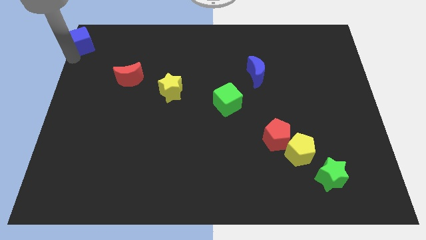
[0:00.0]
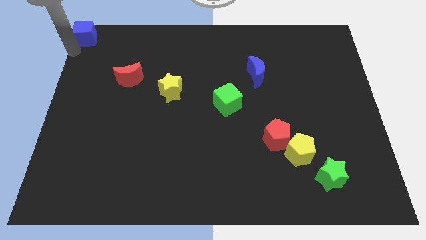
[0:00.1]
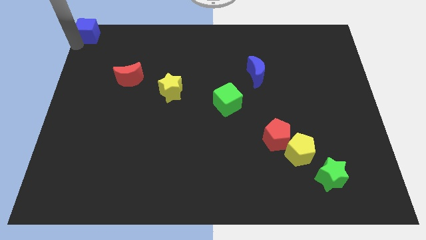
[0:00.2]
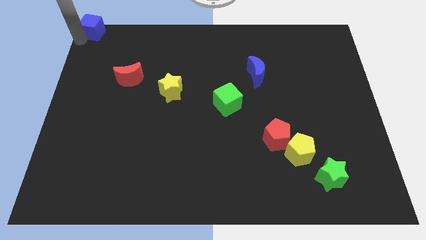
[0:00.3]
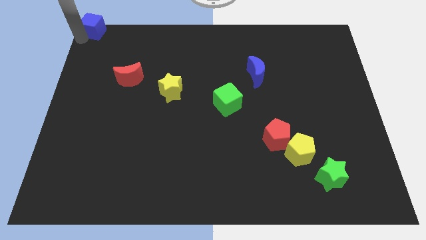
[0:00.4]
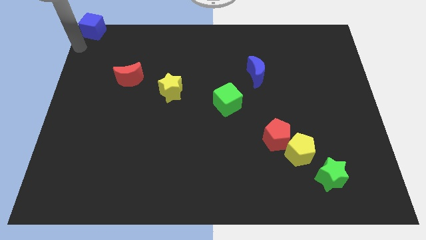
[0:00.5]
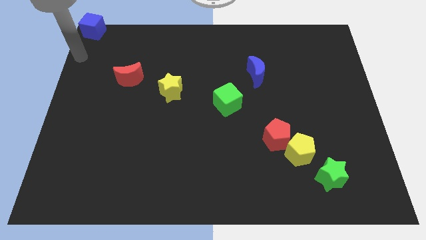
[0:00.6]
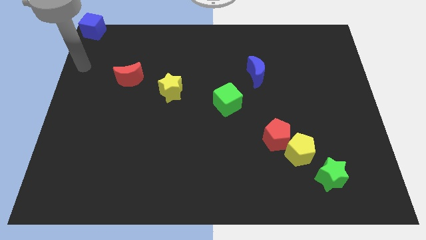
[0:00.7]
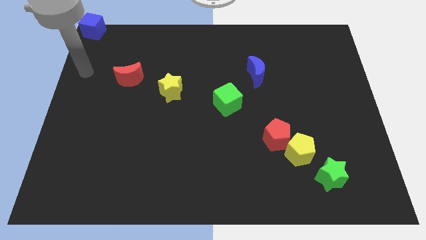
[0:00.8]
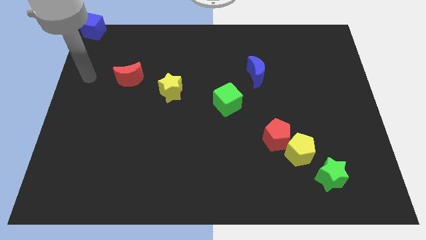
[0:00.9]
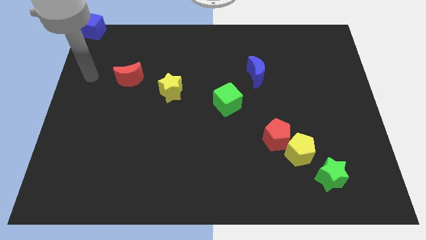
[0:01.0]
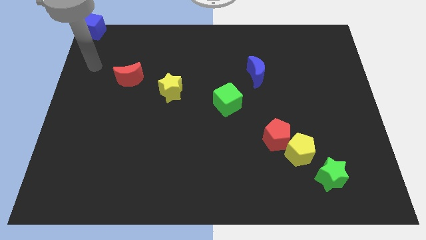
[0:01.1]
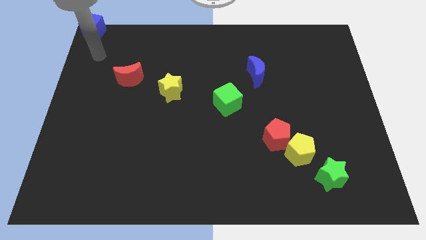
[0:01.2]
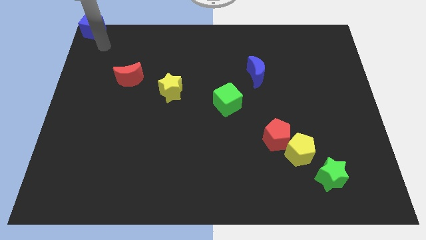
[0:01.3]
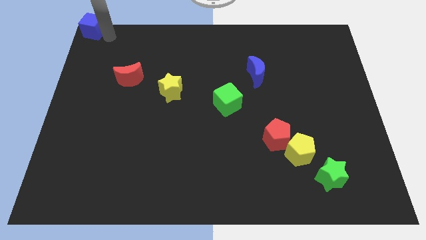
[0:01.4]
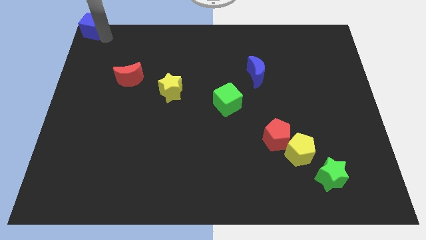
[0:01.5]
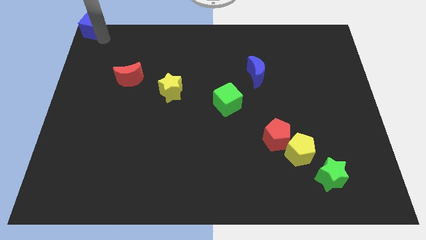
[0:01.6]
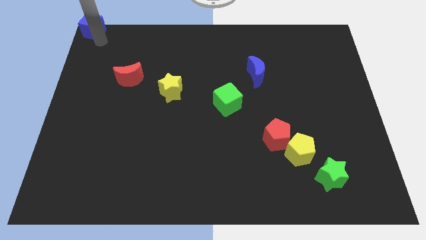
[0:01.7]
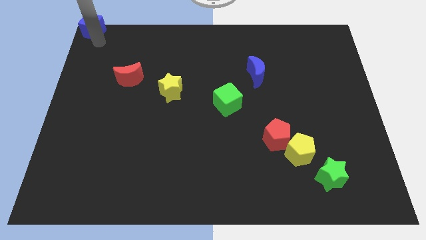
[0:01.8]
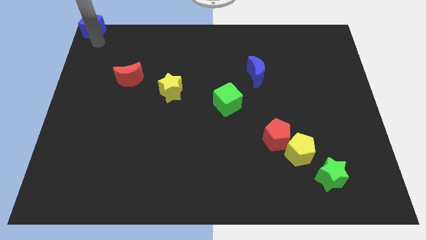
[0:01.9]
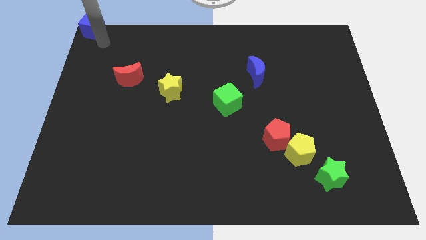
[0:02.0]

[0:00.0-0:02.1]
push the blue cube to the top left of the board

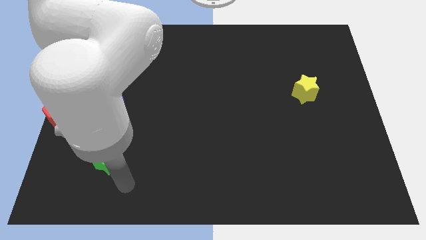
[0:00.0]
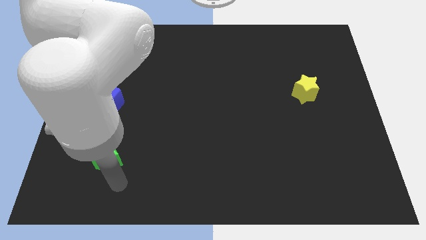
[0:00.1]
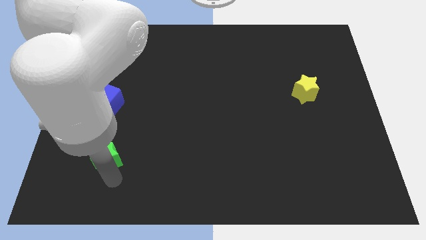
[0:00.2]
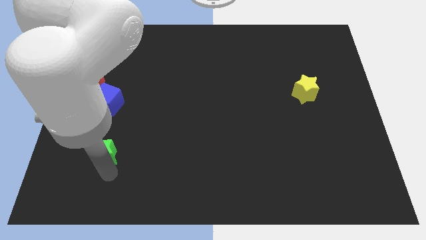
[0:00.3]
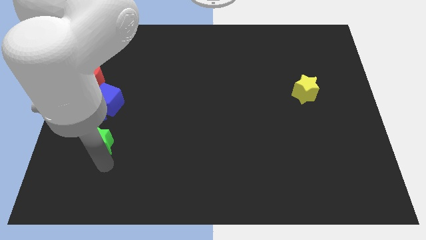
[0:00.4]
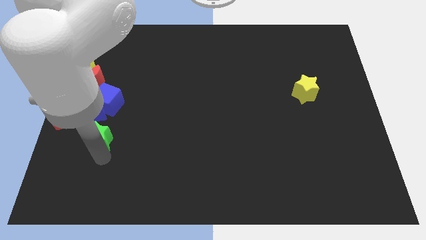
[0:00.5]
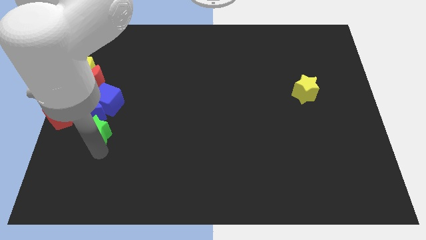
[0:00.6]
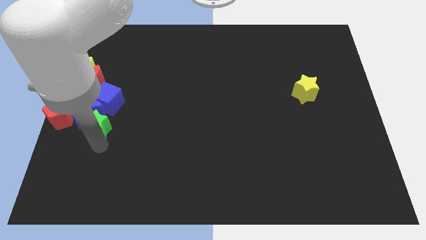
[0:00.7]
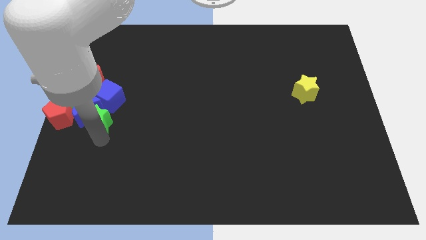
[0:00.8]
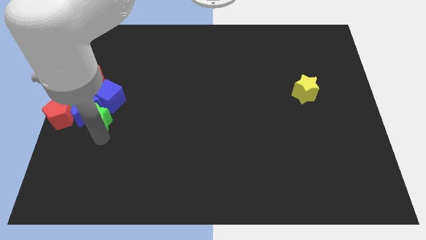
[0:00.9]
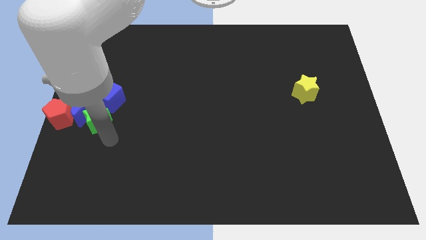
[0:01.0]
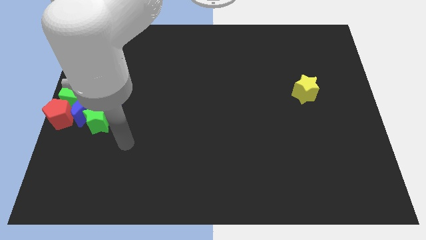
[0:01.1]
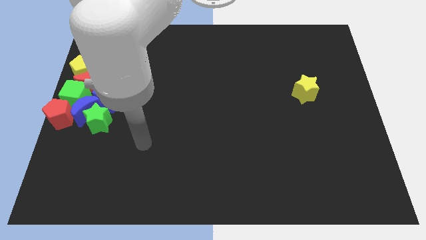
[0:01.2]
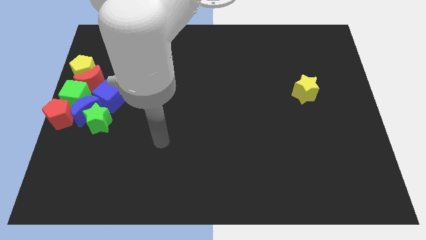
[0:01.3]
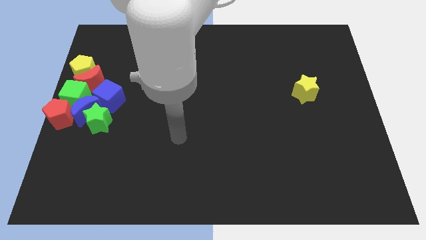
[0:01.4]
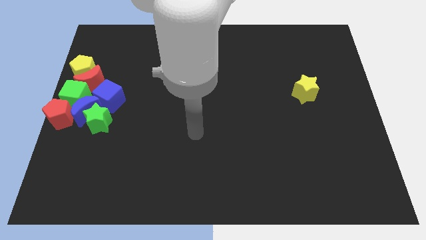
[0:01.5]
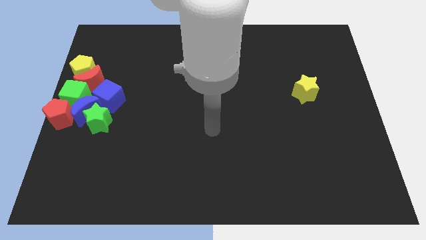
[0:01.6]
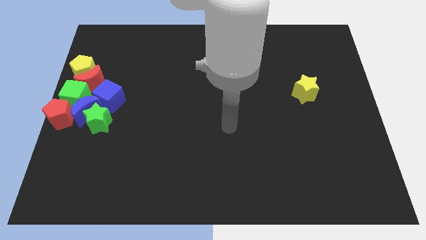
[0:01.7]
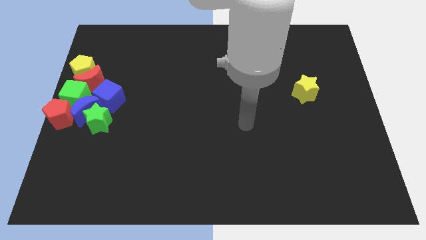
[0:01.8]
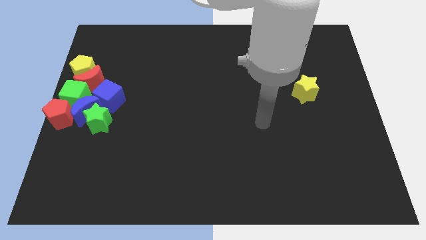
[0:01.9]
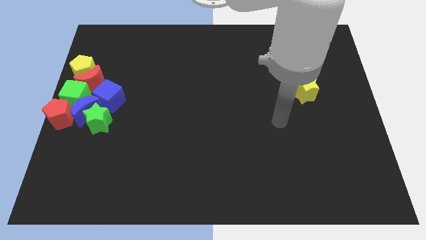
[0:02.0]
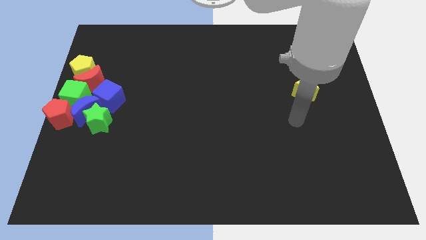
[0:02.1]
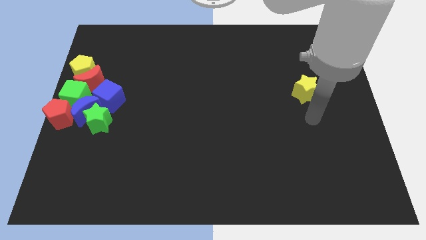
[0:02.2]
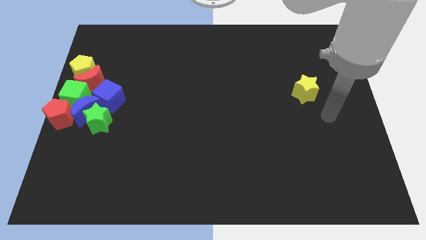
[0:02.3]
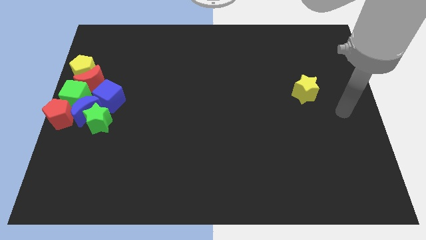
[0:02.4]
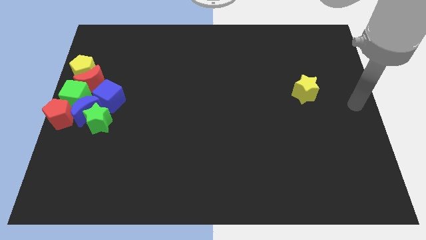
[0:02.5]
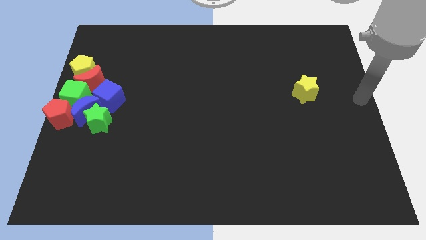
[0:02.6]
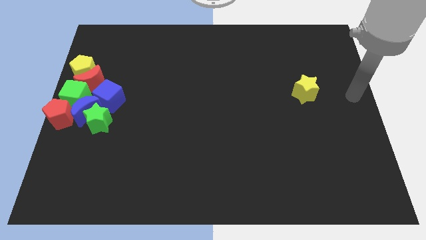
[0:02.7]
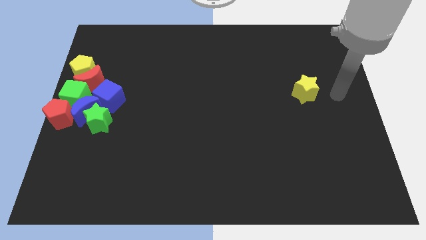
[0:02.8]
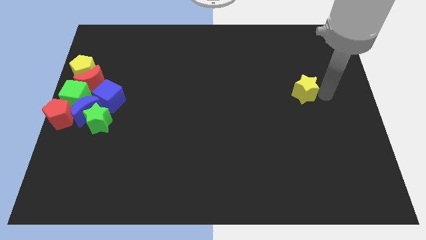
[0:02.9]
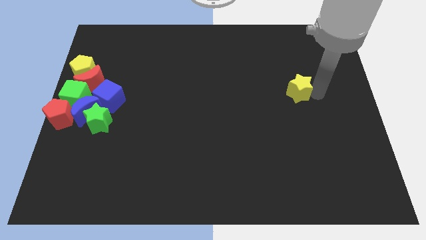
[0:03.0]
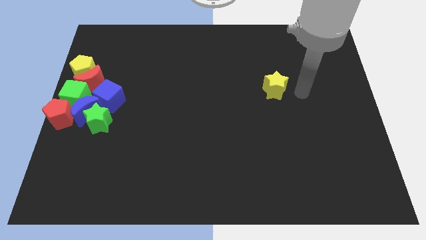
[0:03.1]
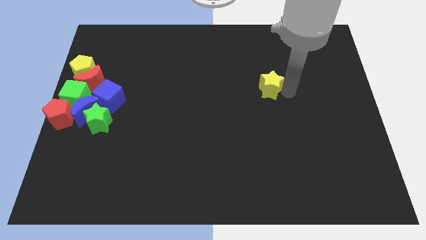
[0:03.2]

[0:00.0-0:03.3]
place the arm to the right of the yellow star

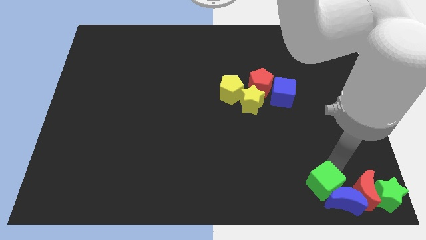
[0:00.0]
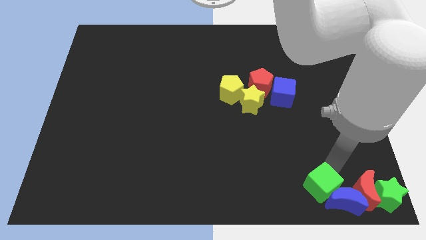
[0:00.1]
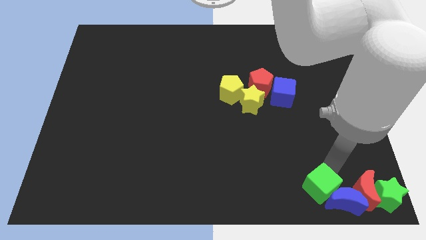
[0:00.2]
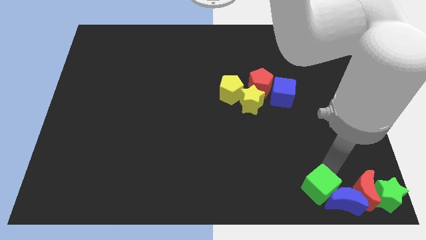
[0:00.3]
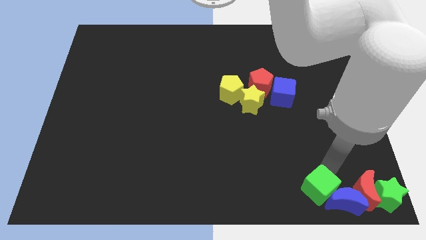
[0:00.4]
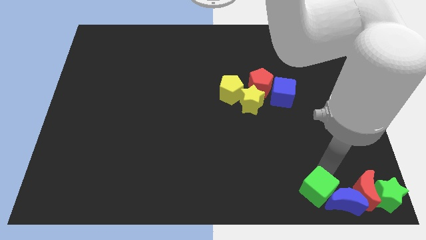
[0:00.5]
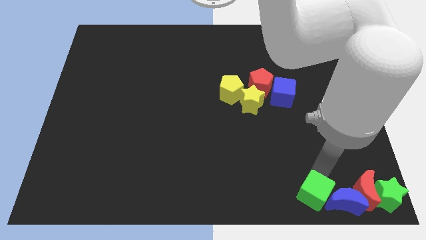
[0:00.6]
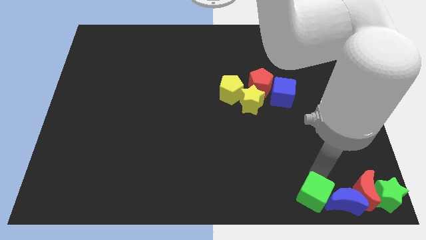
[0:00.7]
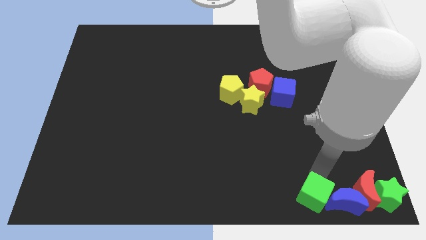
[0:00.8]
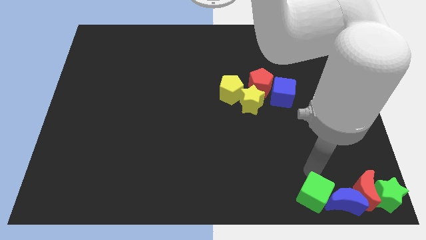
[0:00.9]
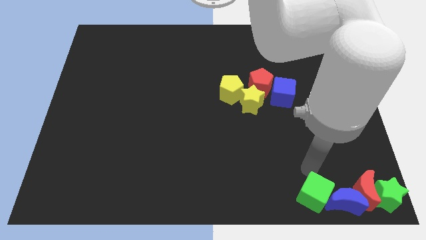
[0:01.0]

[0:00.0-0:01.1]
place green cube left to blue moon

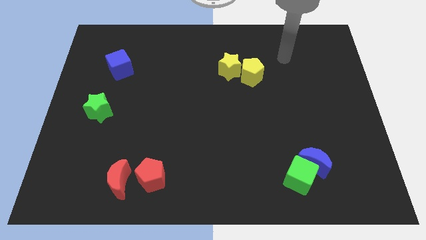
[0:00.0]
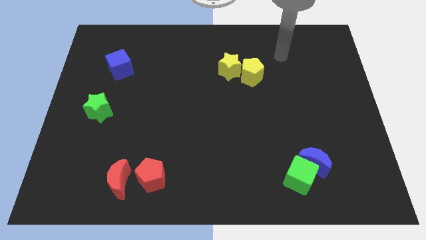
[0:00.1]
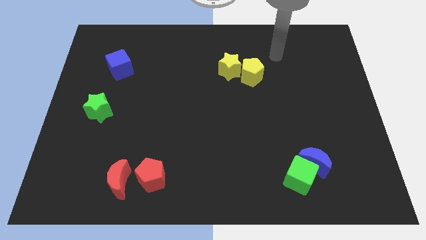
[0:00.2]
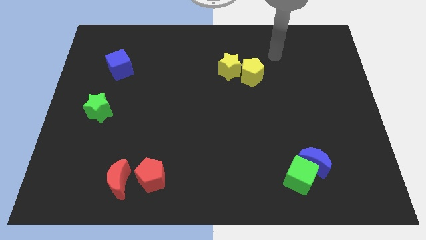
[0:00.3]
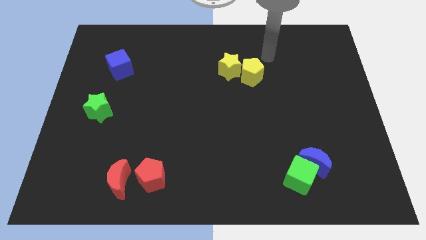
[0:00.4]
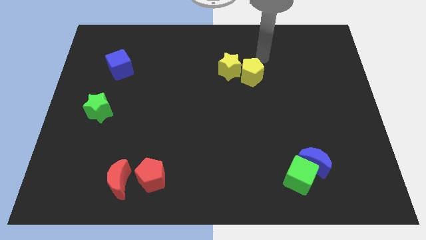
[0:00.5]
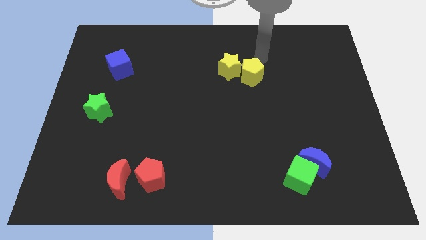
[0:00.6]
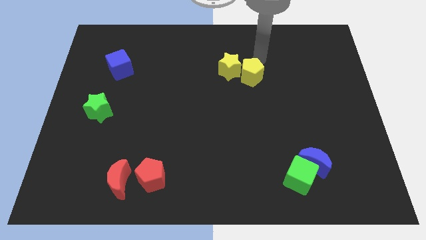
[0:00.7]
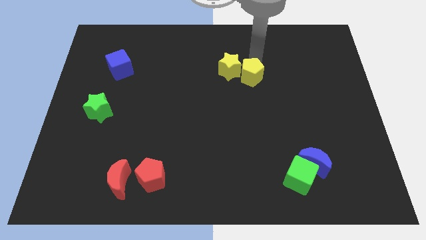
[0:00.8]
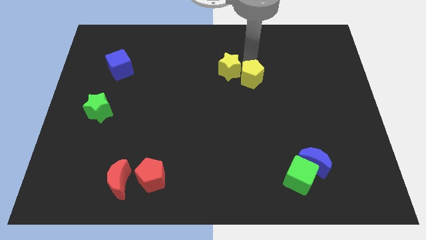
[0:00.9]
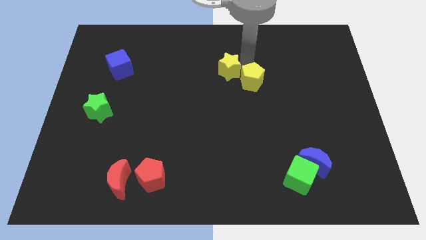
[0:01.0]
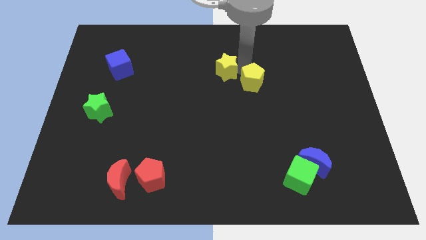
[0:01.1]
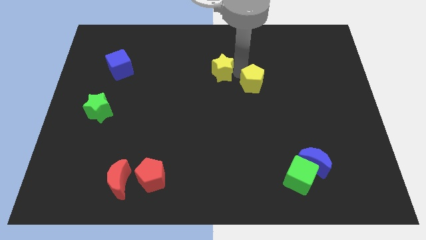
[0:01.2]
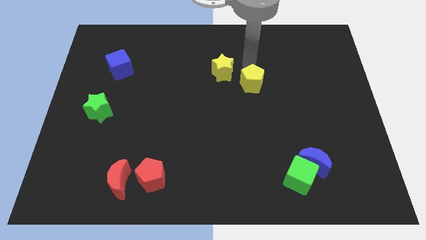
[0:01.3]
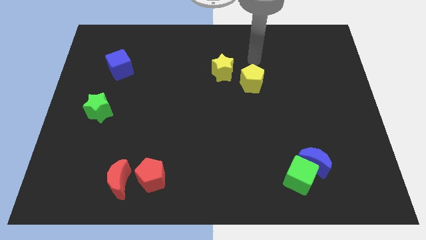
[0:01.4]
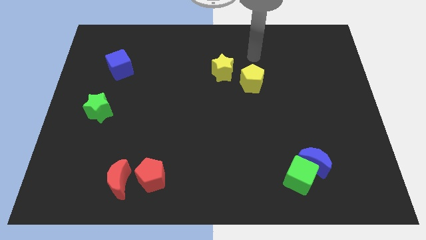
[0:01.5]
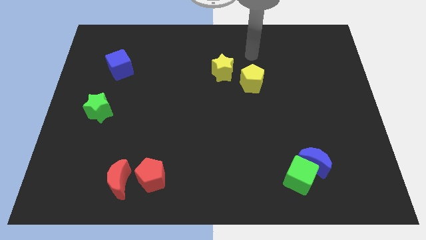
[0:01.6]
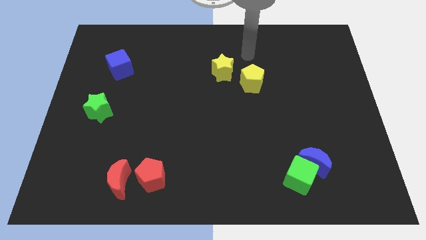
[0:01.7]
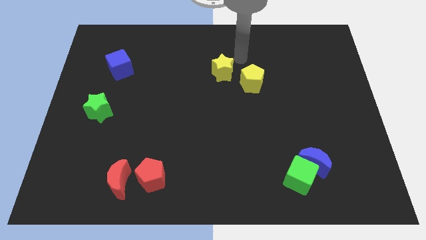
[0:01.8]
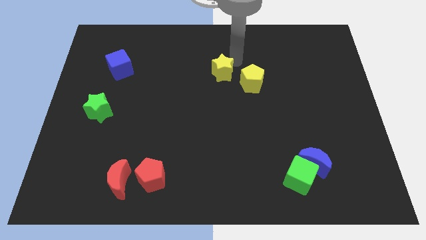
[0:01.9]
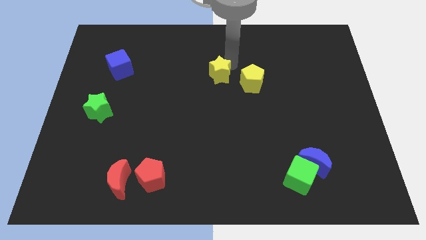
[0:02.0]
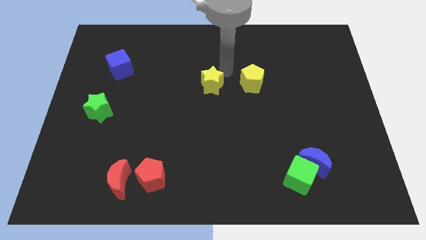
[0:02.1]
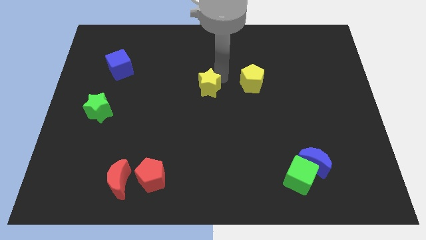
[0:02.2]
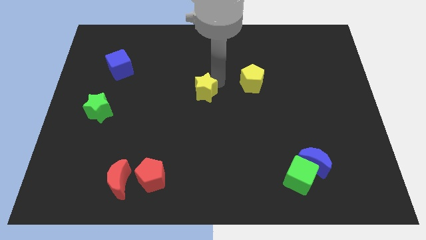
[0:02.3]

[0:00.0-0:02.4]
separate the yellow blocks

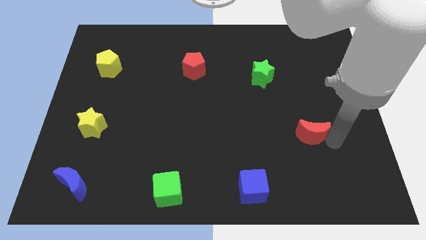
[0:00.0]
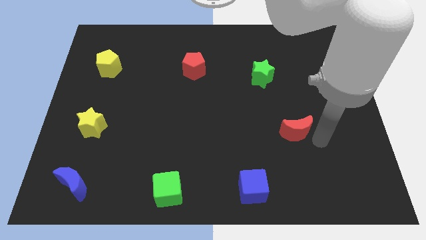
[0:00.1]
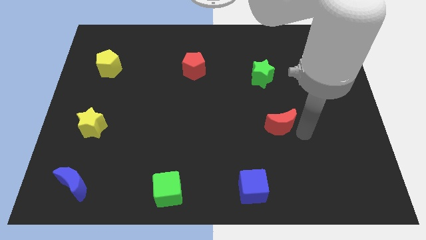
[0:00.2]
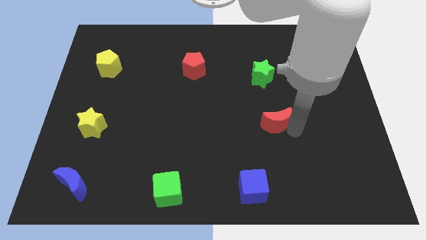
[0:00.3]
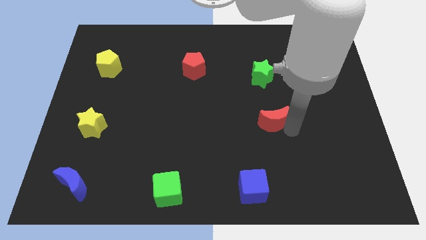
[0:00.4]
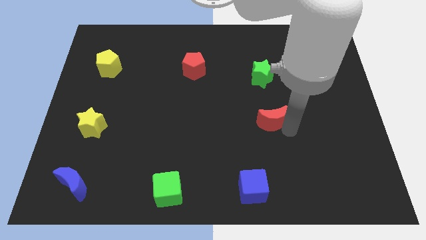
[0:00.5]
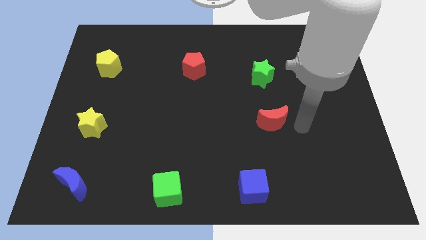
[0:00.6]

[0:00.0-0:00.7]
move the red crescent to the left of the board
